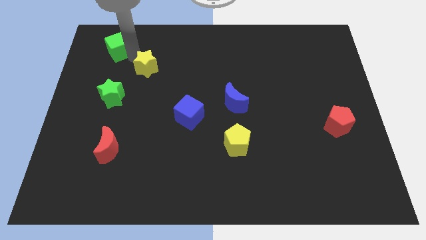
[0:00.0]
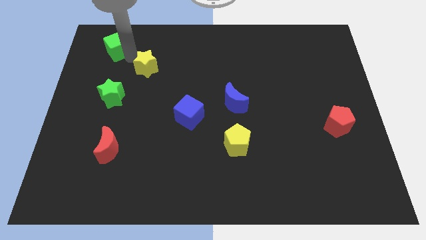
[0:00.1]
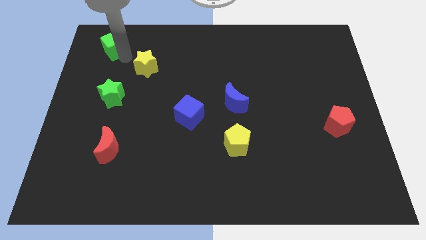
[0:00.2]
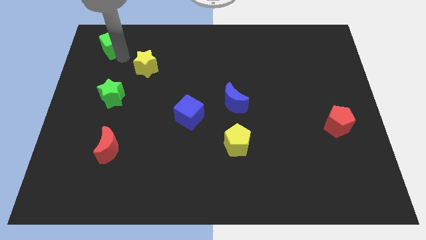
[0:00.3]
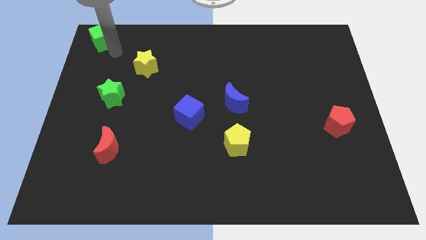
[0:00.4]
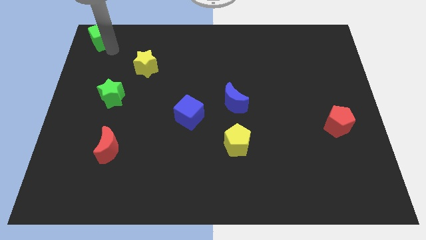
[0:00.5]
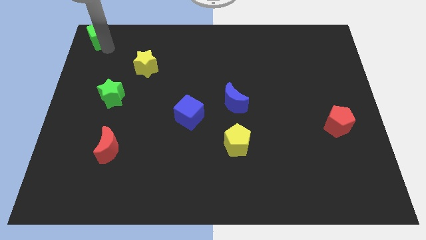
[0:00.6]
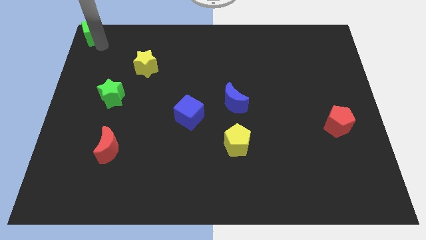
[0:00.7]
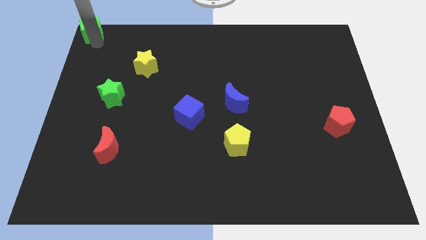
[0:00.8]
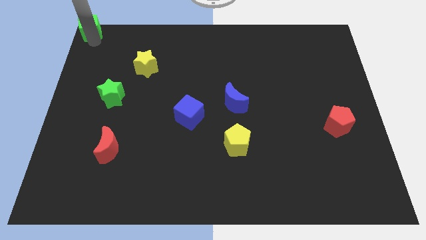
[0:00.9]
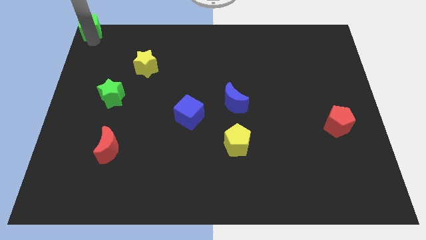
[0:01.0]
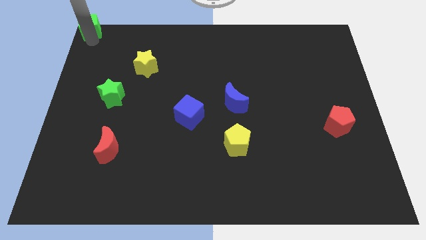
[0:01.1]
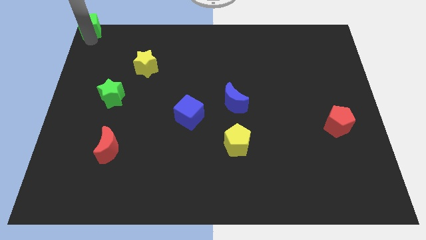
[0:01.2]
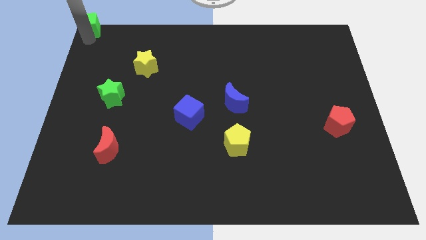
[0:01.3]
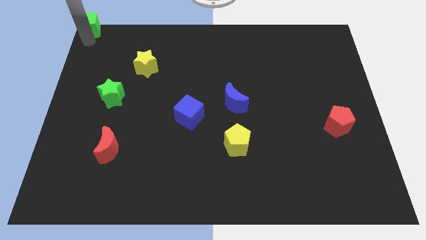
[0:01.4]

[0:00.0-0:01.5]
move the green cube to the top left corner of the board

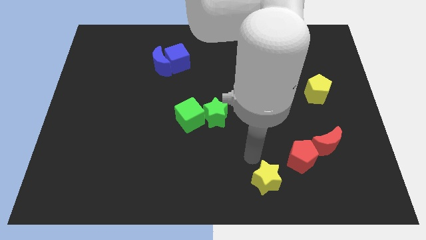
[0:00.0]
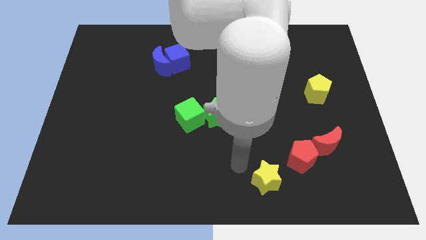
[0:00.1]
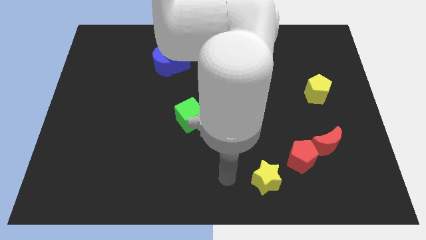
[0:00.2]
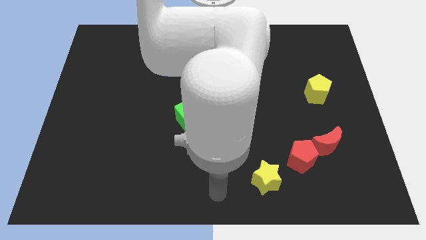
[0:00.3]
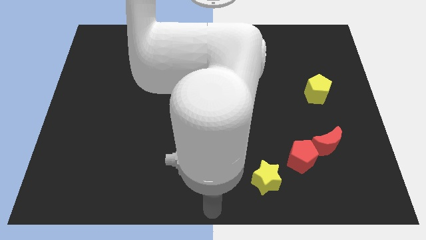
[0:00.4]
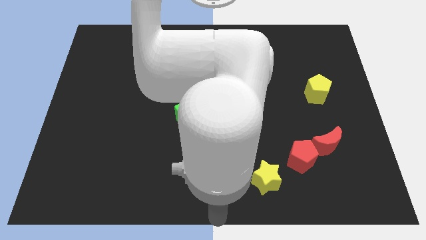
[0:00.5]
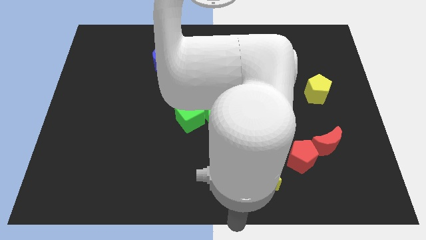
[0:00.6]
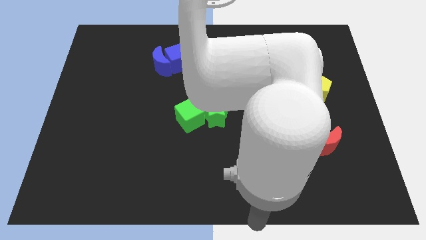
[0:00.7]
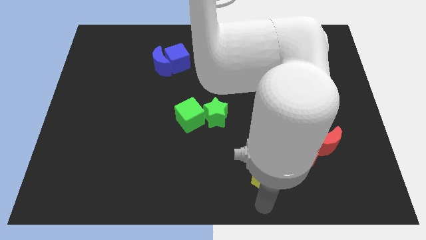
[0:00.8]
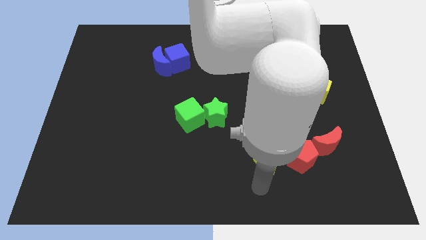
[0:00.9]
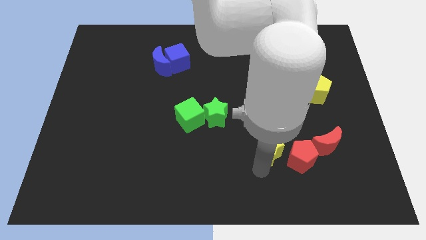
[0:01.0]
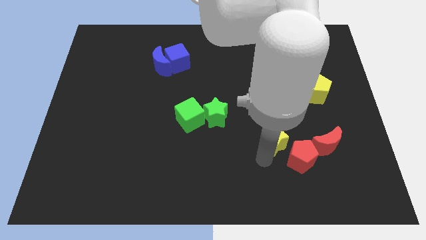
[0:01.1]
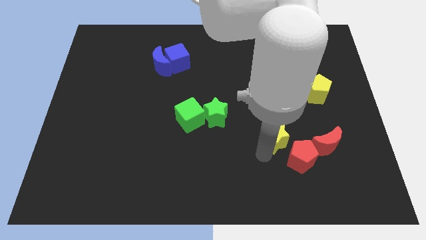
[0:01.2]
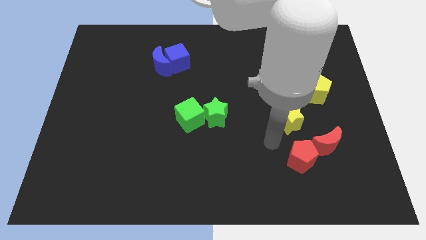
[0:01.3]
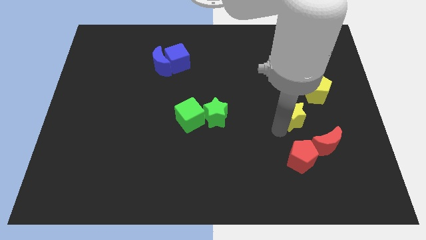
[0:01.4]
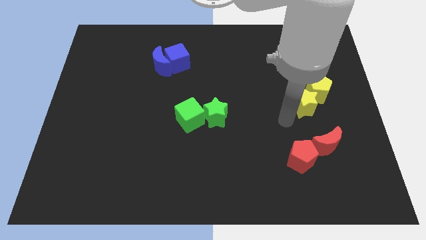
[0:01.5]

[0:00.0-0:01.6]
move the yellow star towards the yellow pentagon

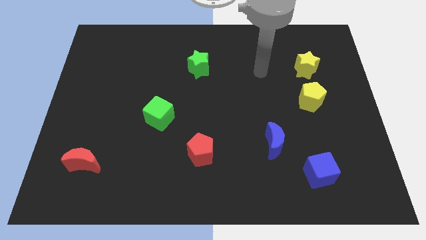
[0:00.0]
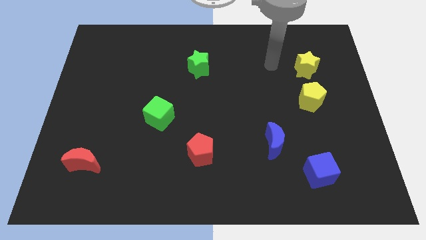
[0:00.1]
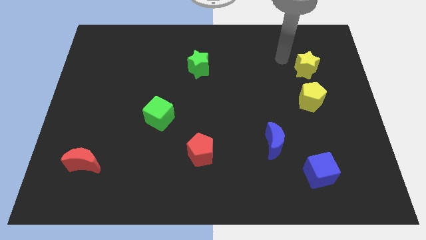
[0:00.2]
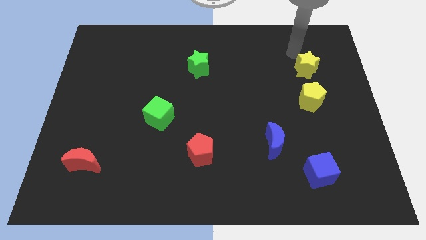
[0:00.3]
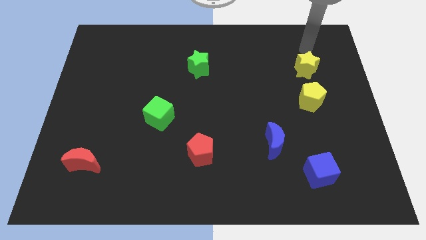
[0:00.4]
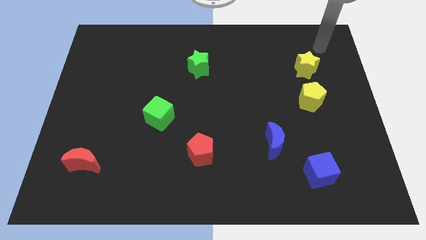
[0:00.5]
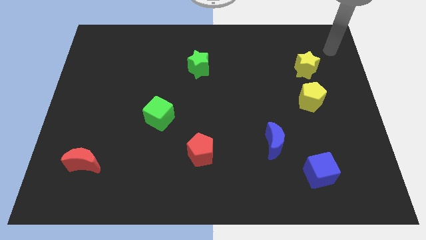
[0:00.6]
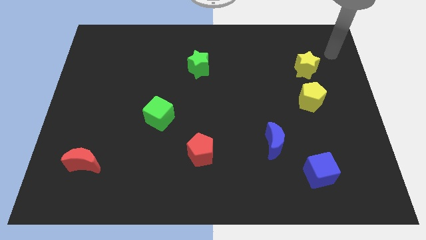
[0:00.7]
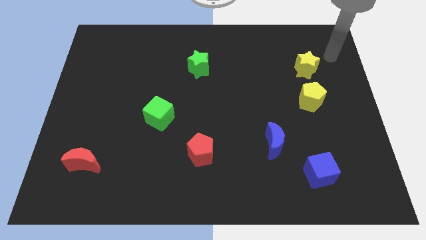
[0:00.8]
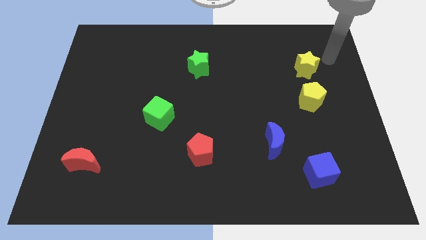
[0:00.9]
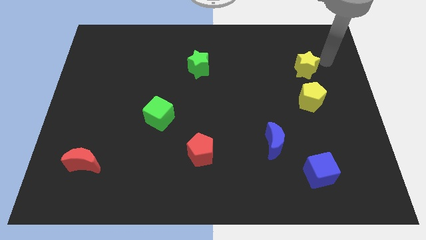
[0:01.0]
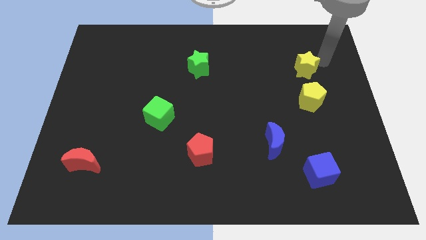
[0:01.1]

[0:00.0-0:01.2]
move your arm towards the yellow star

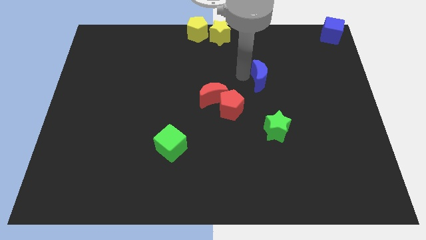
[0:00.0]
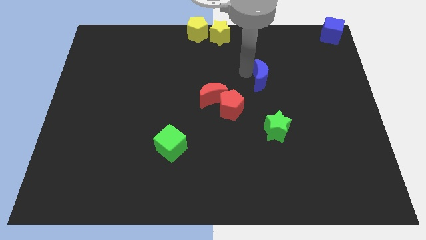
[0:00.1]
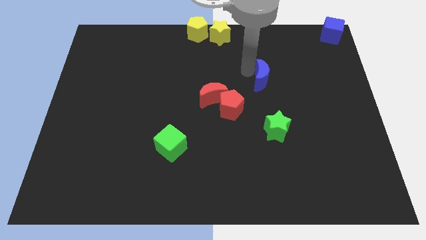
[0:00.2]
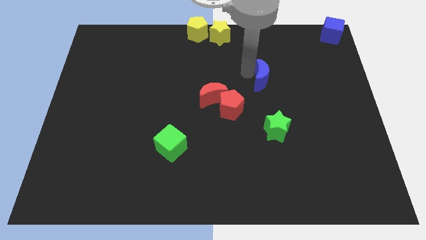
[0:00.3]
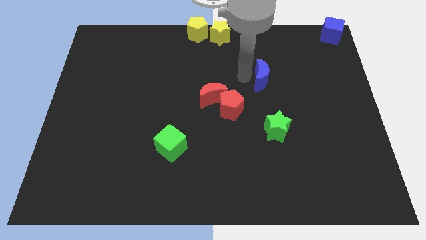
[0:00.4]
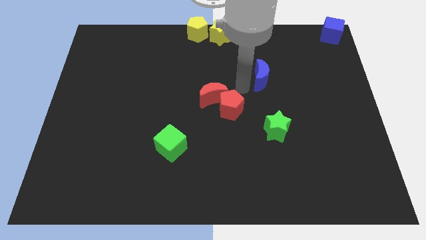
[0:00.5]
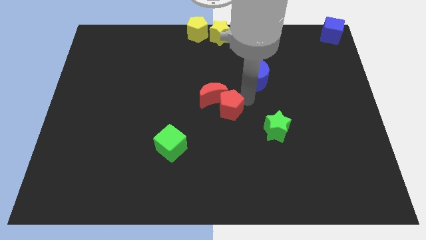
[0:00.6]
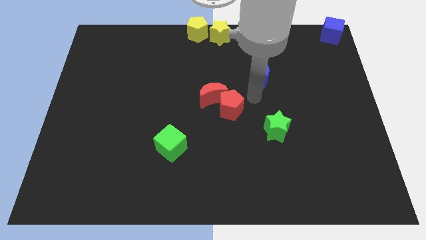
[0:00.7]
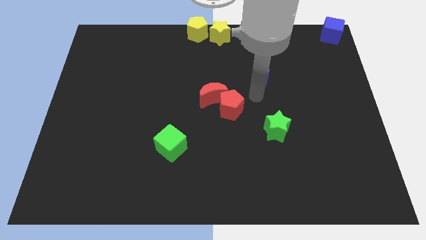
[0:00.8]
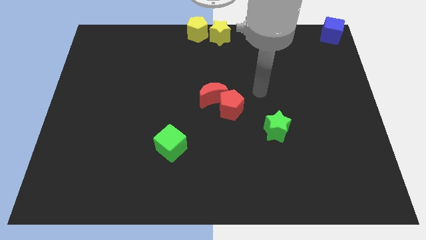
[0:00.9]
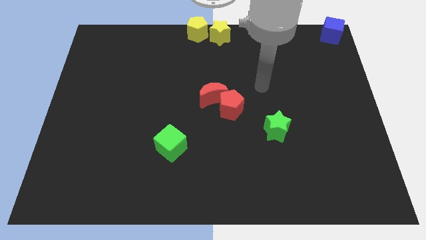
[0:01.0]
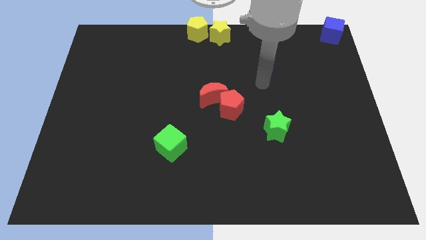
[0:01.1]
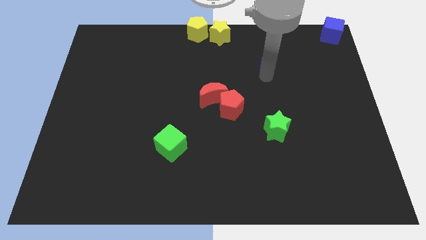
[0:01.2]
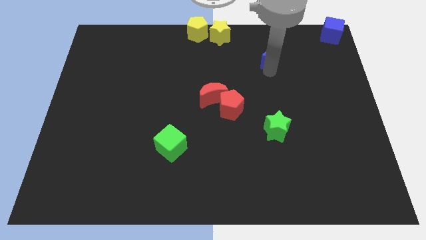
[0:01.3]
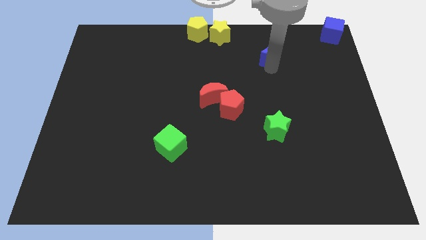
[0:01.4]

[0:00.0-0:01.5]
put the blue moon vertically above the green star

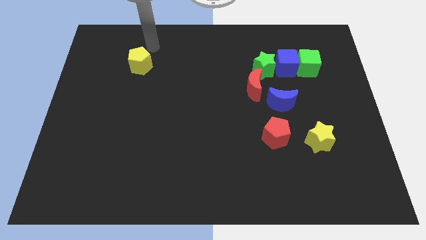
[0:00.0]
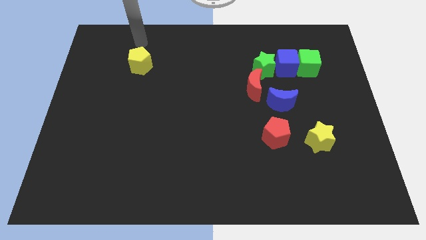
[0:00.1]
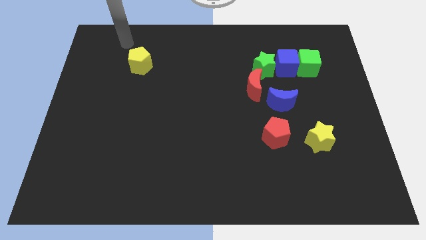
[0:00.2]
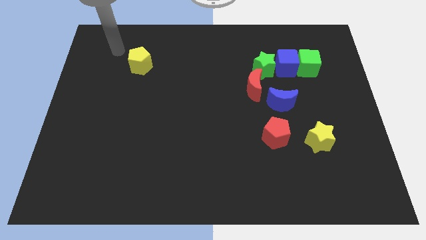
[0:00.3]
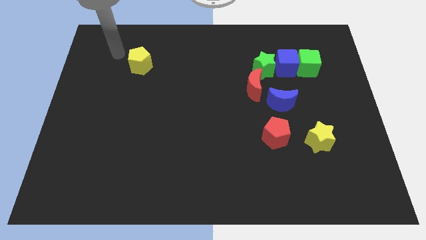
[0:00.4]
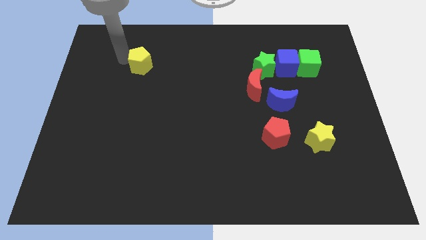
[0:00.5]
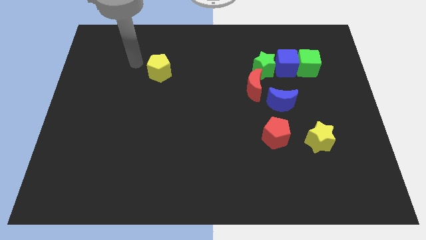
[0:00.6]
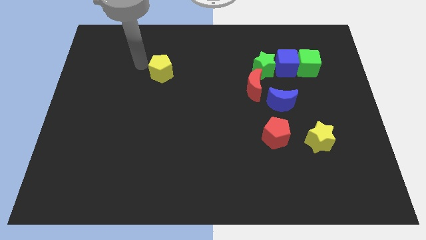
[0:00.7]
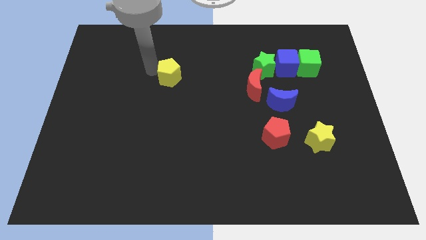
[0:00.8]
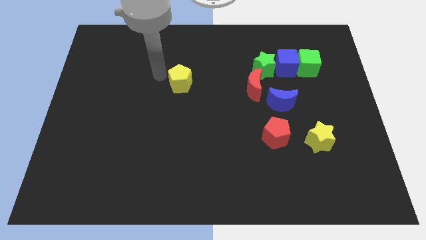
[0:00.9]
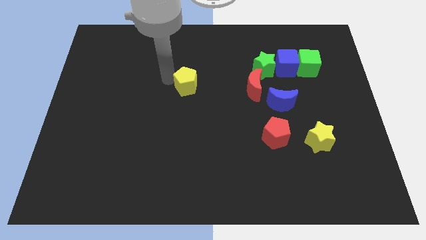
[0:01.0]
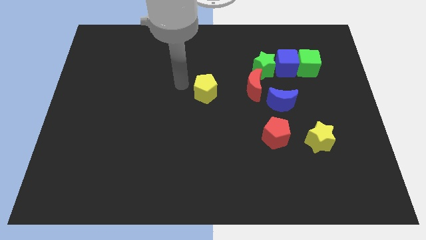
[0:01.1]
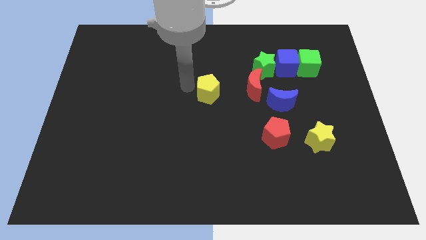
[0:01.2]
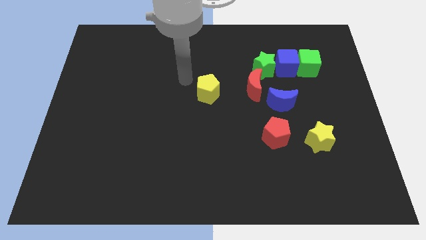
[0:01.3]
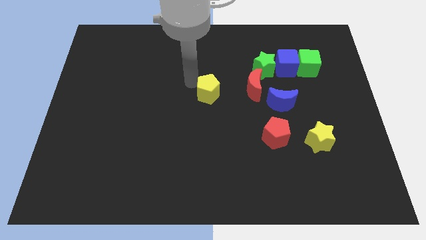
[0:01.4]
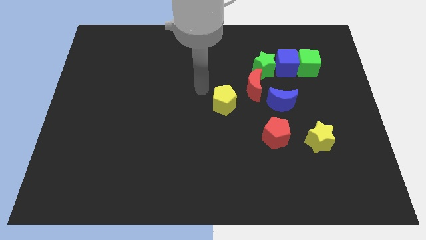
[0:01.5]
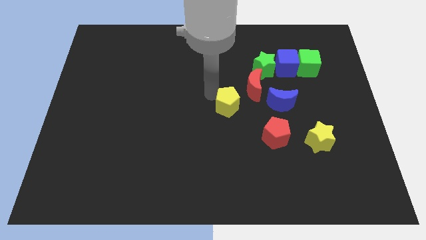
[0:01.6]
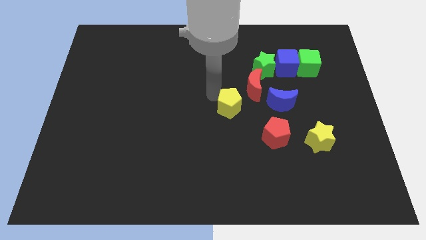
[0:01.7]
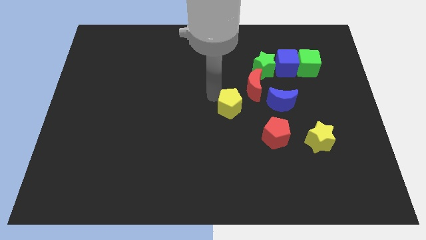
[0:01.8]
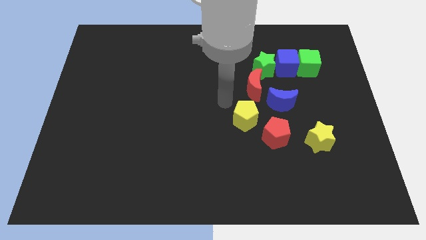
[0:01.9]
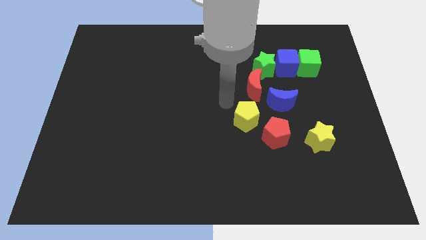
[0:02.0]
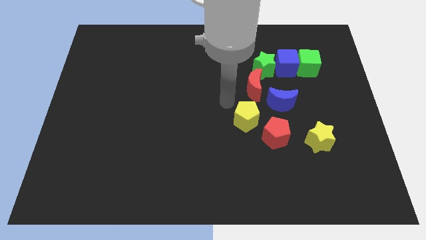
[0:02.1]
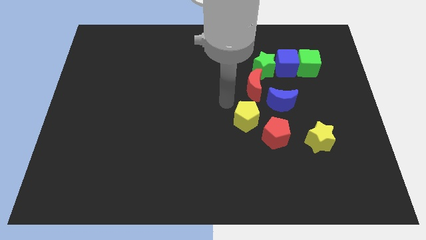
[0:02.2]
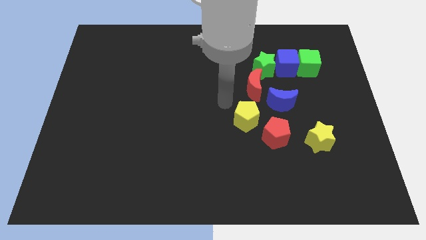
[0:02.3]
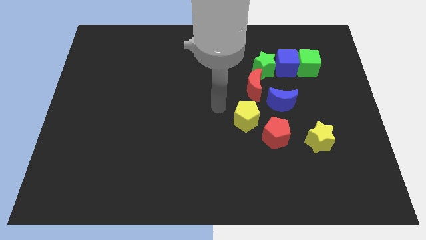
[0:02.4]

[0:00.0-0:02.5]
move yellow pentagon close to the red pentagon

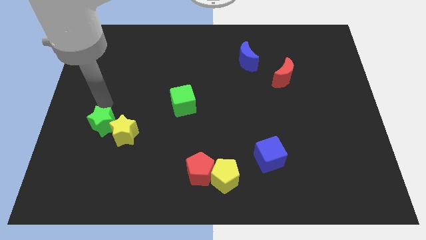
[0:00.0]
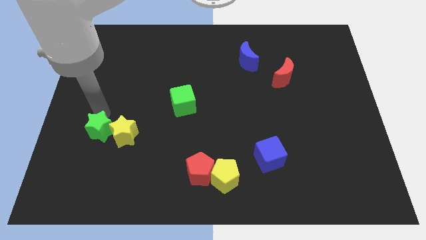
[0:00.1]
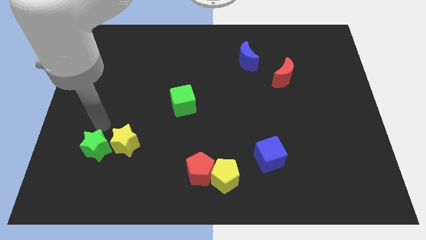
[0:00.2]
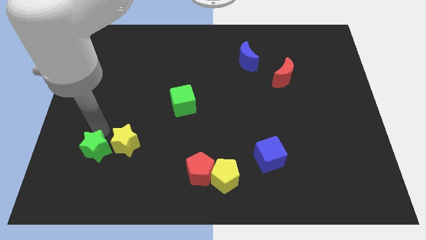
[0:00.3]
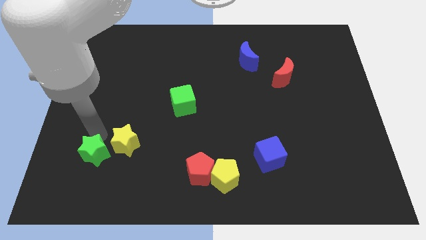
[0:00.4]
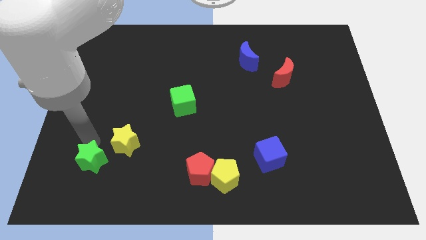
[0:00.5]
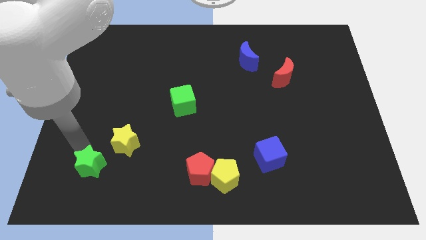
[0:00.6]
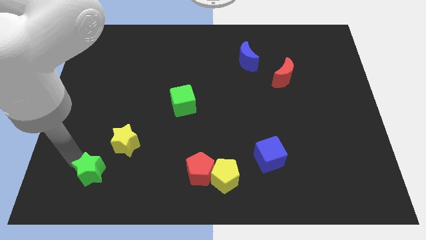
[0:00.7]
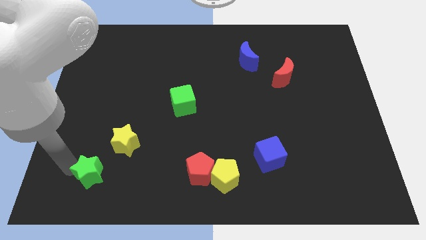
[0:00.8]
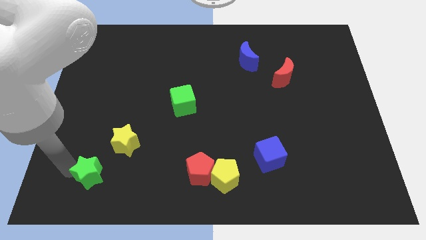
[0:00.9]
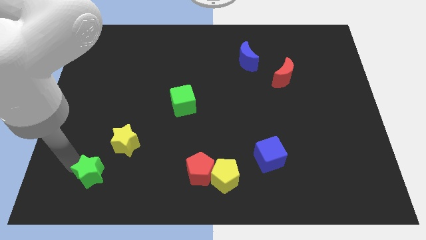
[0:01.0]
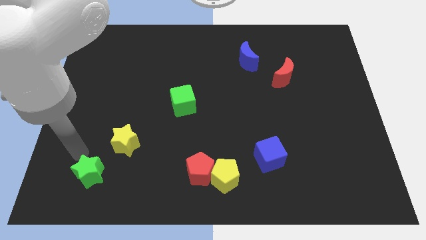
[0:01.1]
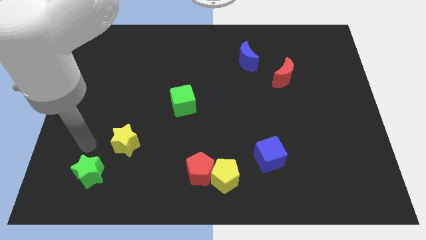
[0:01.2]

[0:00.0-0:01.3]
separate the green and yellow stars
